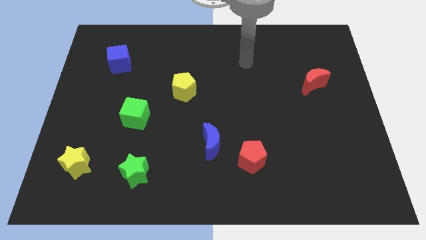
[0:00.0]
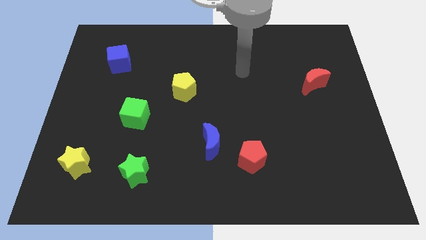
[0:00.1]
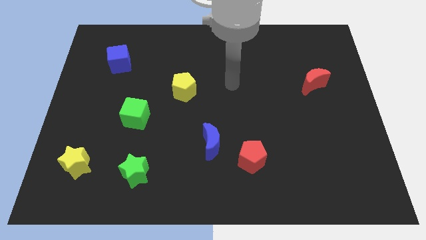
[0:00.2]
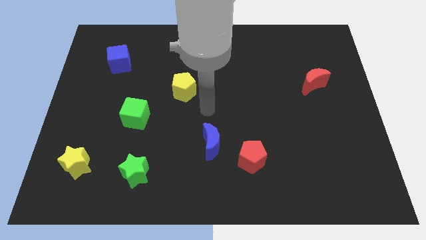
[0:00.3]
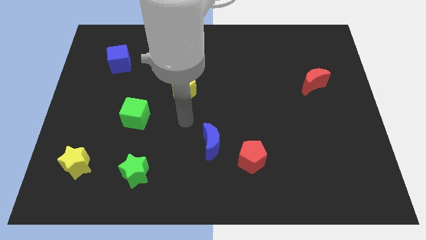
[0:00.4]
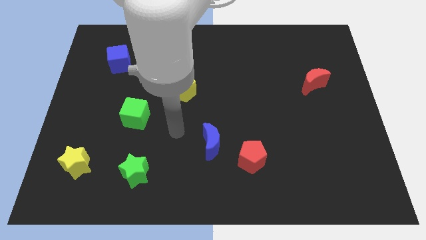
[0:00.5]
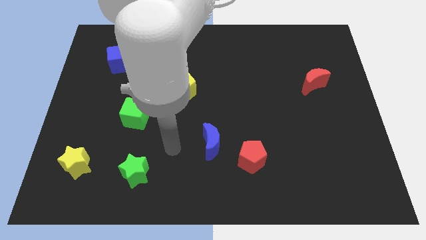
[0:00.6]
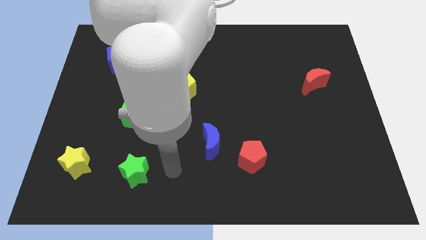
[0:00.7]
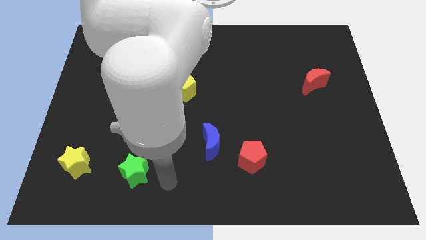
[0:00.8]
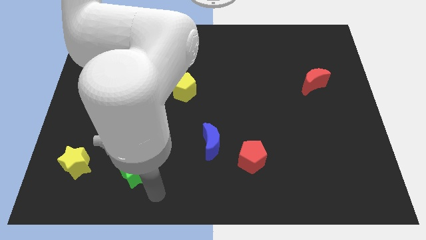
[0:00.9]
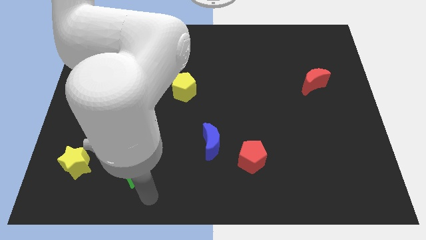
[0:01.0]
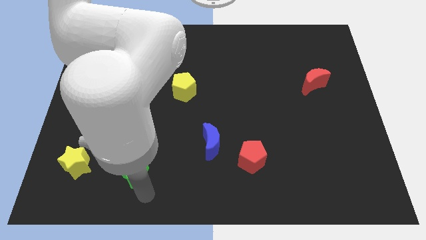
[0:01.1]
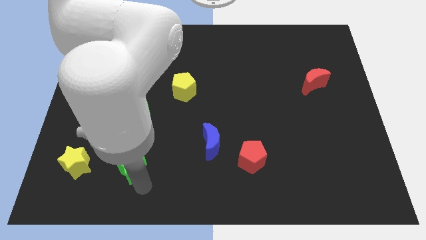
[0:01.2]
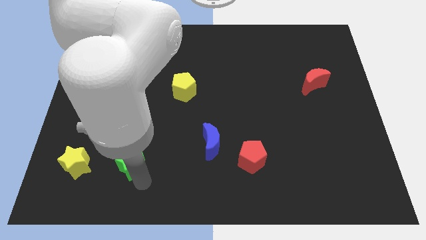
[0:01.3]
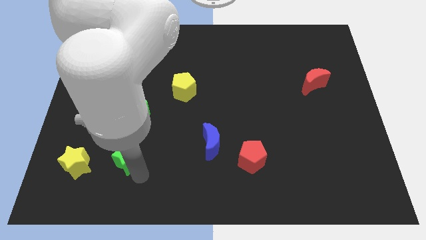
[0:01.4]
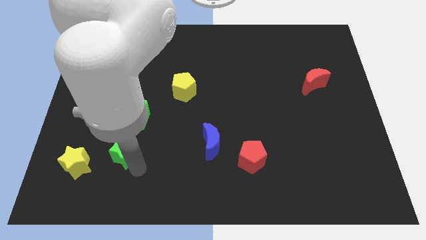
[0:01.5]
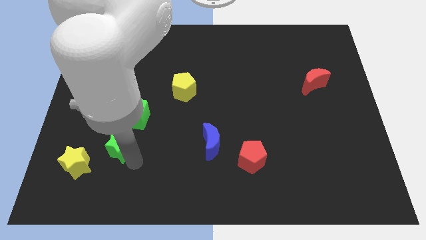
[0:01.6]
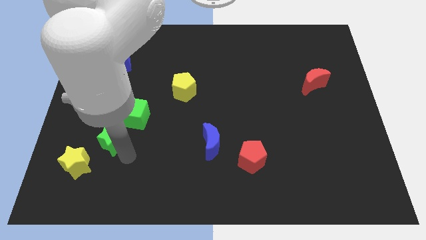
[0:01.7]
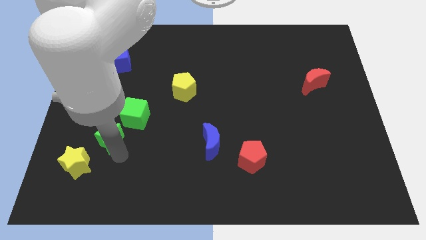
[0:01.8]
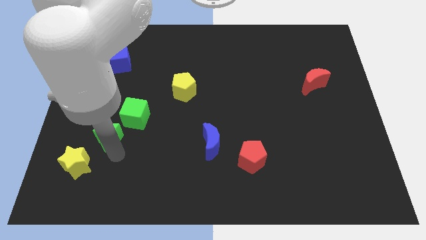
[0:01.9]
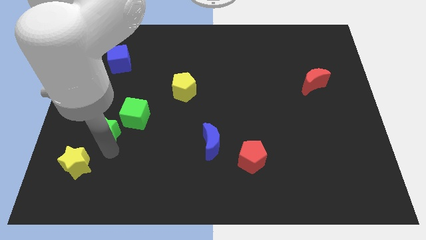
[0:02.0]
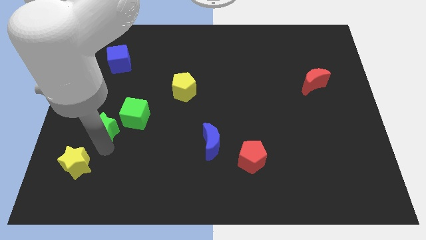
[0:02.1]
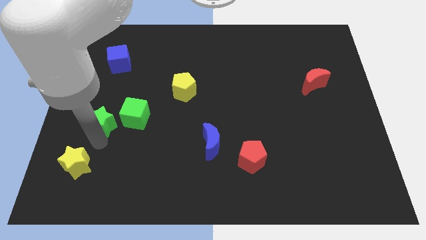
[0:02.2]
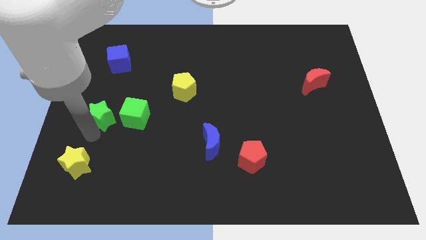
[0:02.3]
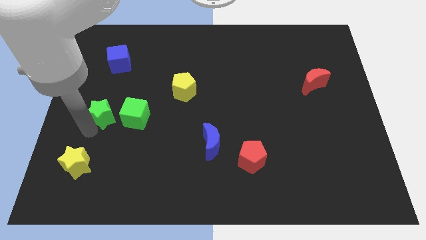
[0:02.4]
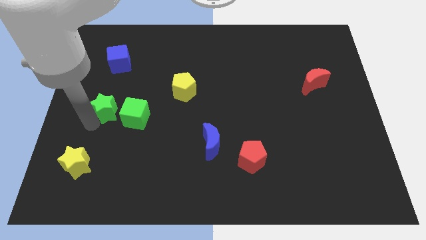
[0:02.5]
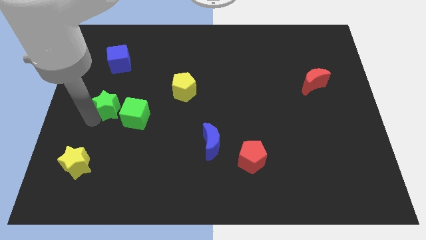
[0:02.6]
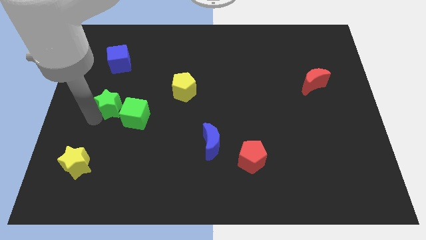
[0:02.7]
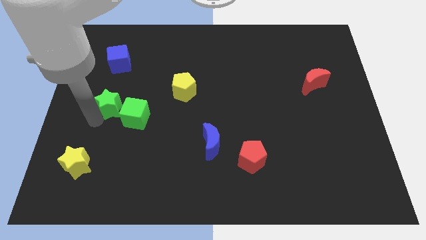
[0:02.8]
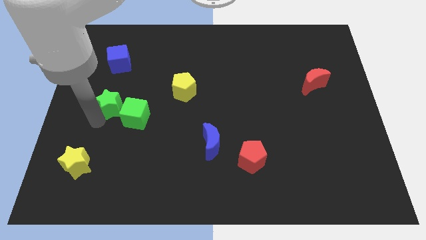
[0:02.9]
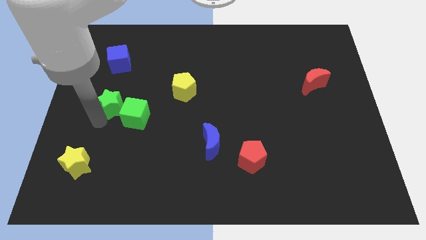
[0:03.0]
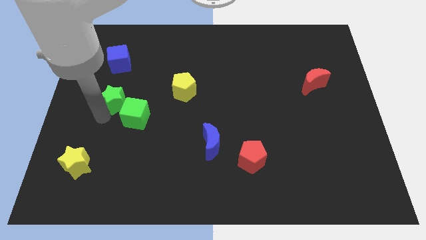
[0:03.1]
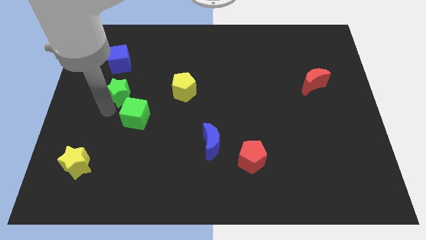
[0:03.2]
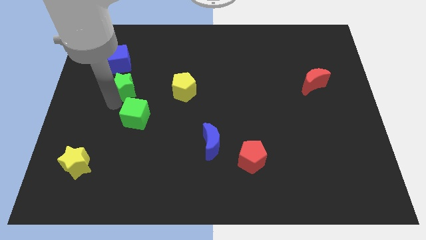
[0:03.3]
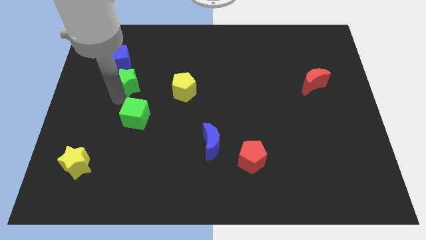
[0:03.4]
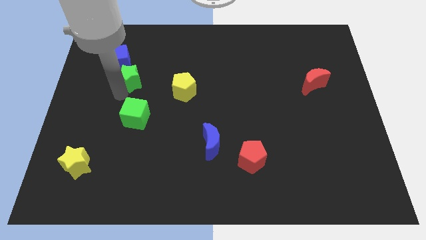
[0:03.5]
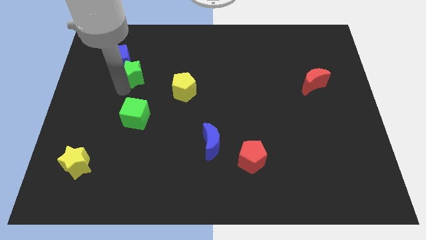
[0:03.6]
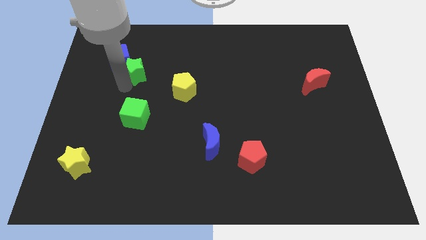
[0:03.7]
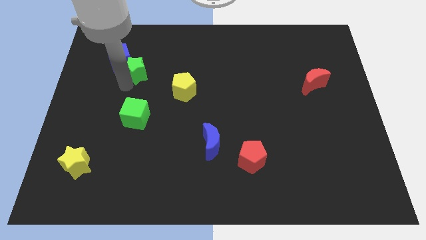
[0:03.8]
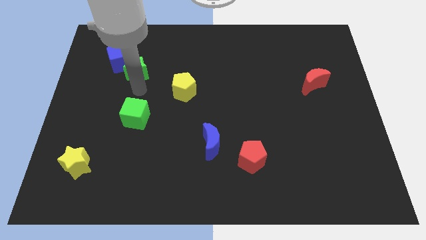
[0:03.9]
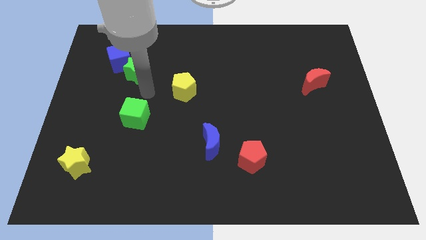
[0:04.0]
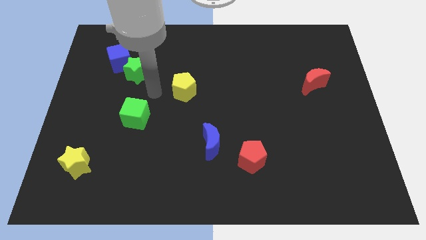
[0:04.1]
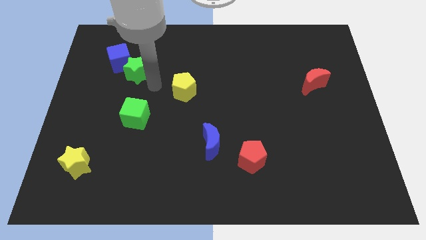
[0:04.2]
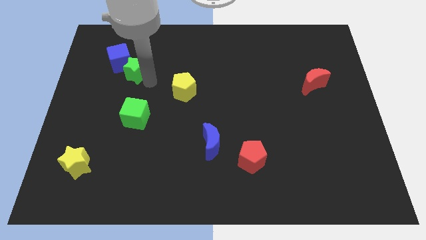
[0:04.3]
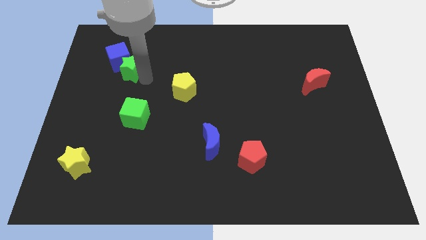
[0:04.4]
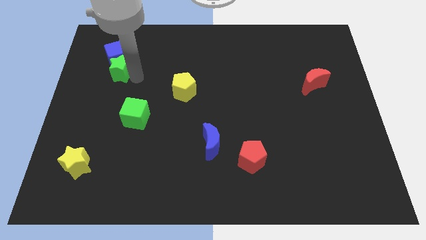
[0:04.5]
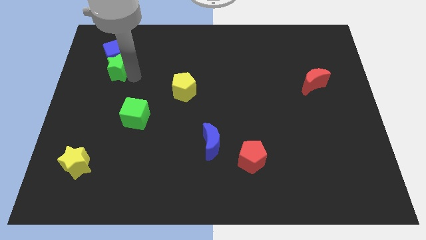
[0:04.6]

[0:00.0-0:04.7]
move the green star close to the blue cube

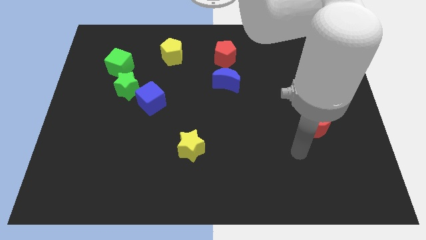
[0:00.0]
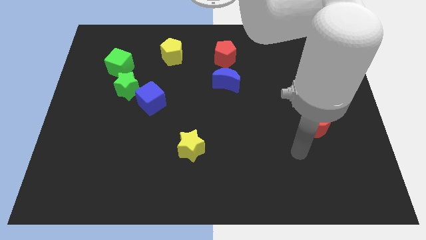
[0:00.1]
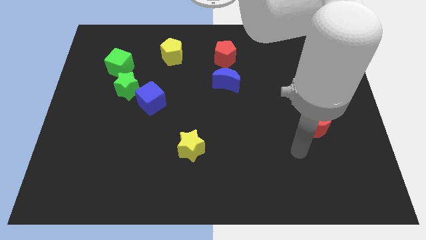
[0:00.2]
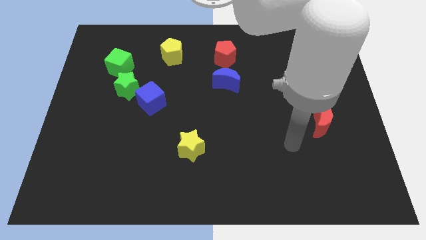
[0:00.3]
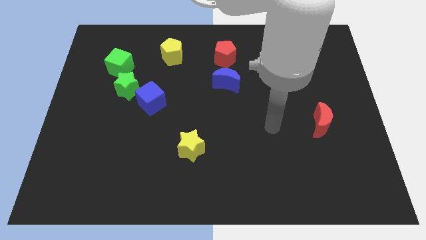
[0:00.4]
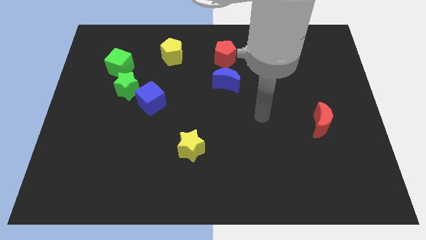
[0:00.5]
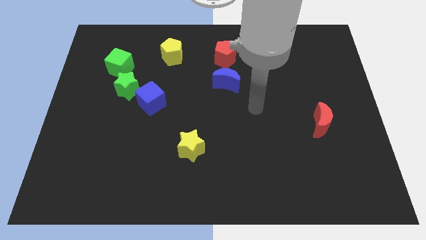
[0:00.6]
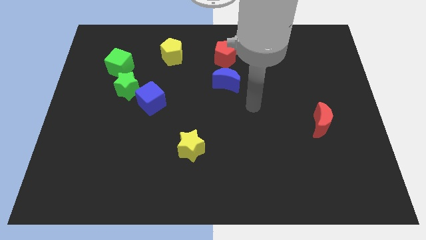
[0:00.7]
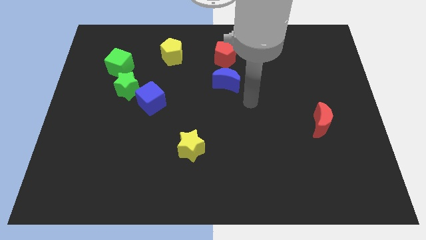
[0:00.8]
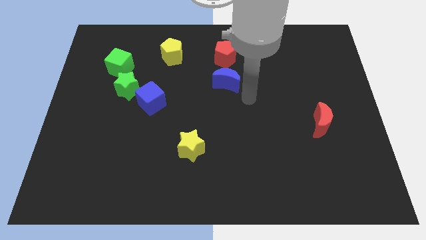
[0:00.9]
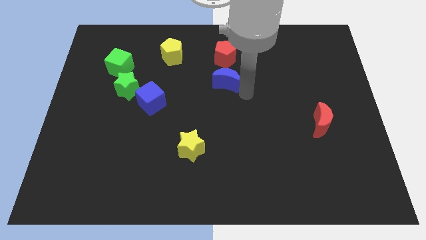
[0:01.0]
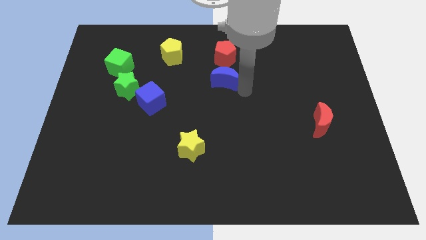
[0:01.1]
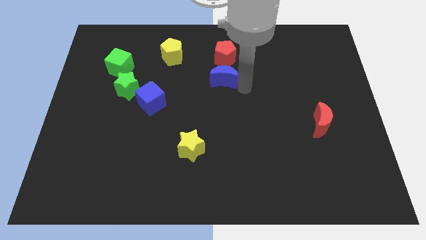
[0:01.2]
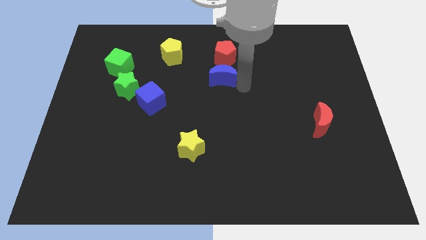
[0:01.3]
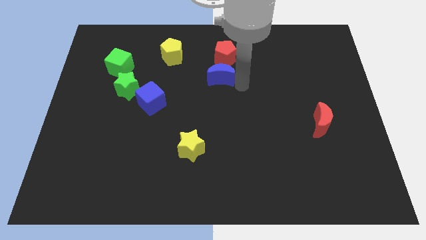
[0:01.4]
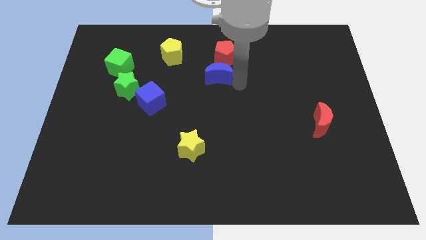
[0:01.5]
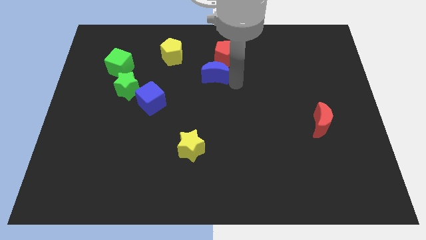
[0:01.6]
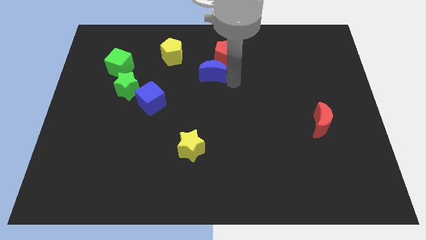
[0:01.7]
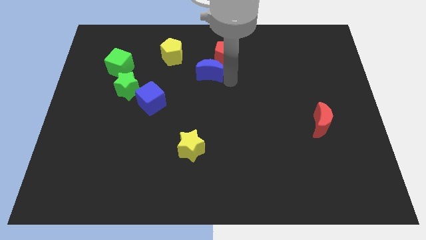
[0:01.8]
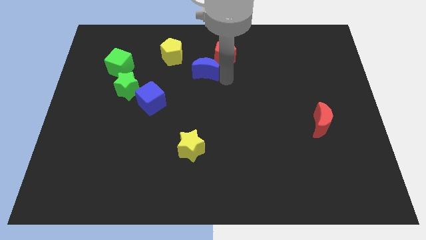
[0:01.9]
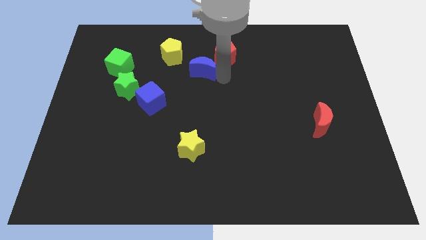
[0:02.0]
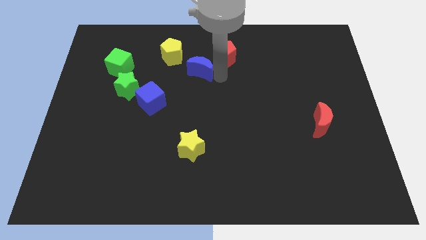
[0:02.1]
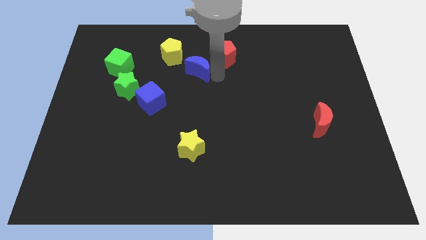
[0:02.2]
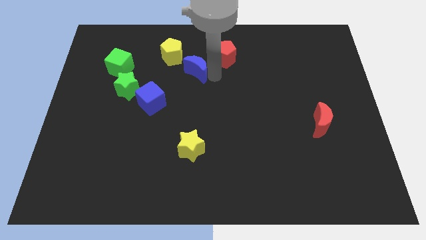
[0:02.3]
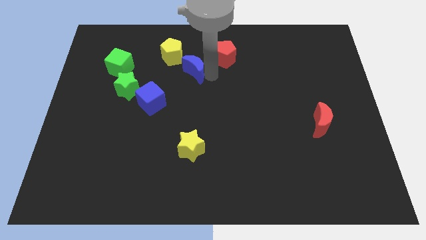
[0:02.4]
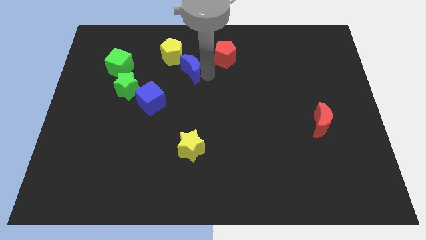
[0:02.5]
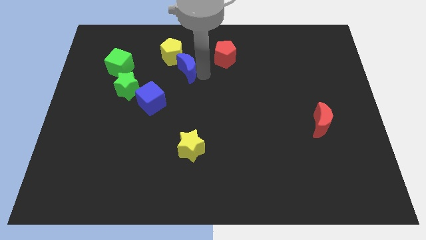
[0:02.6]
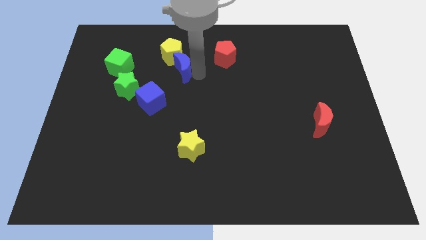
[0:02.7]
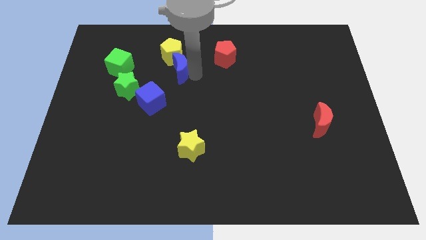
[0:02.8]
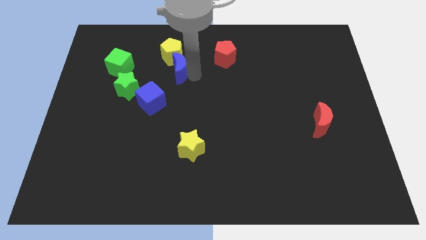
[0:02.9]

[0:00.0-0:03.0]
move the blue moon next to the yellow pentagon

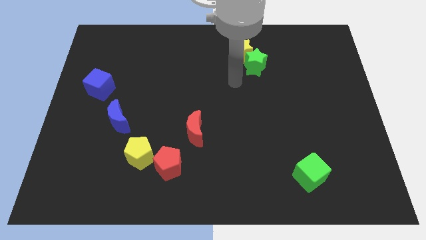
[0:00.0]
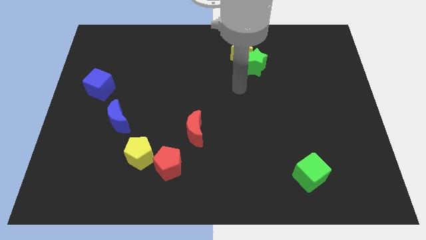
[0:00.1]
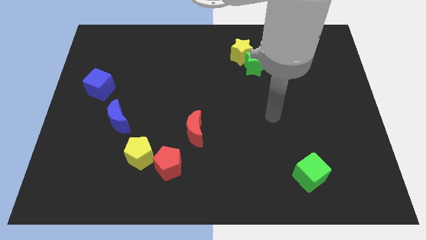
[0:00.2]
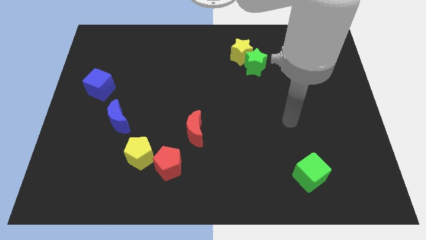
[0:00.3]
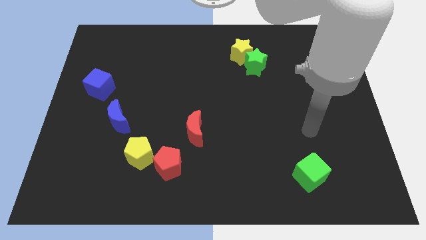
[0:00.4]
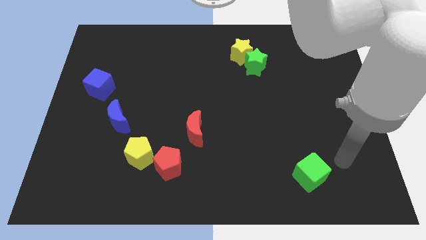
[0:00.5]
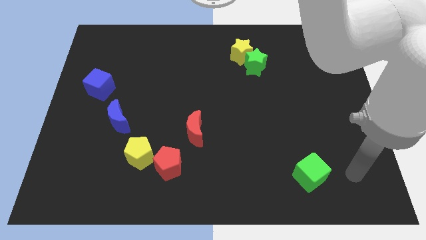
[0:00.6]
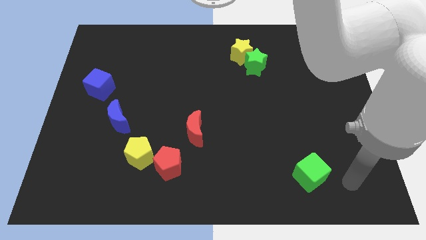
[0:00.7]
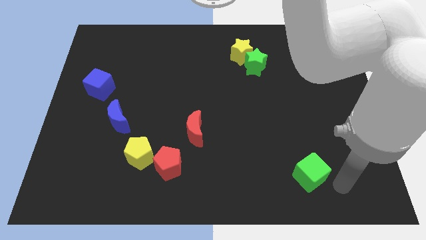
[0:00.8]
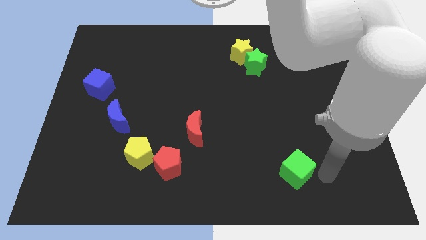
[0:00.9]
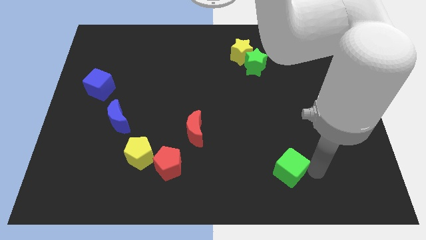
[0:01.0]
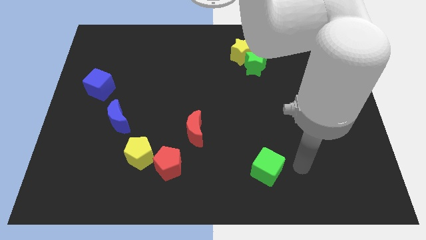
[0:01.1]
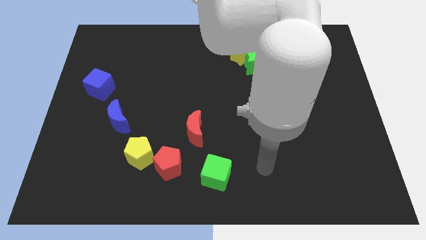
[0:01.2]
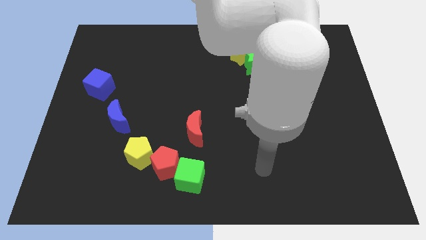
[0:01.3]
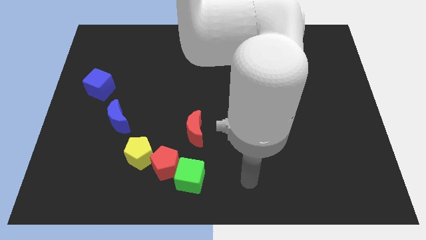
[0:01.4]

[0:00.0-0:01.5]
put the green cube to the red pentagon
